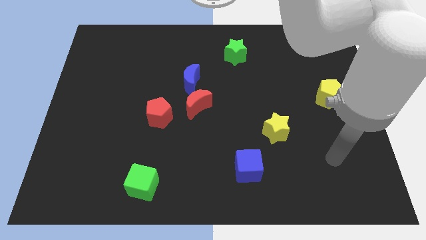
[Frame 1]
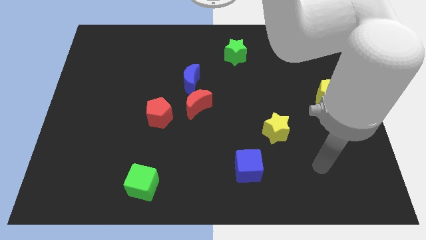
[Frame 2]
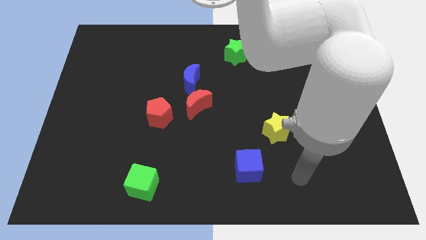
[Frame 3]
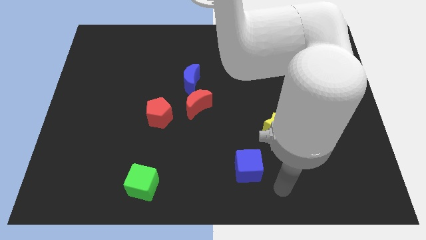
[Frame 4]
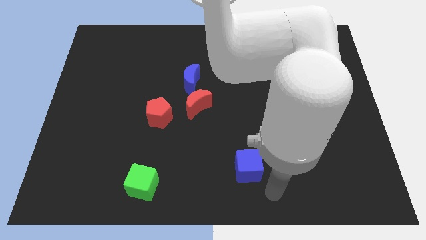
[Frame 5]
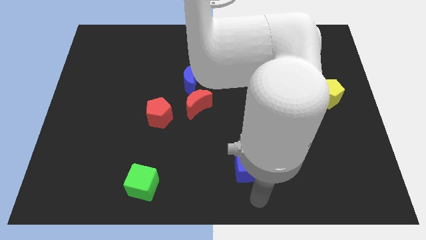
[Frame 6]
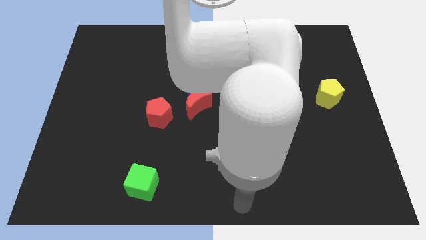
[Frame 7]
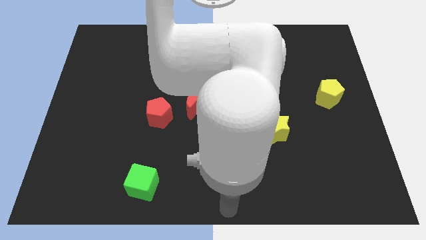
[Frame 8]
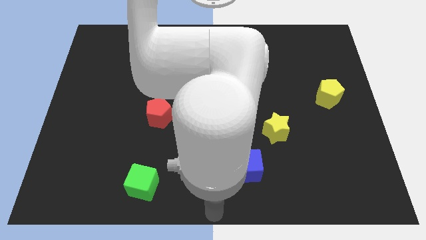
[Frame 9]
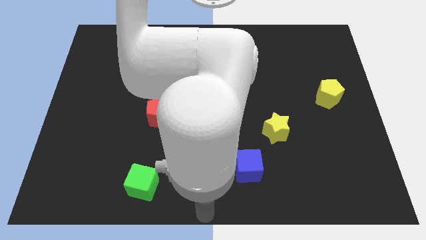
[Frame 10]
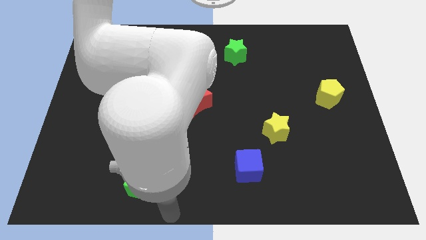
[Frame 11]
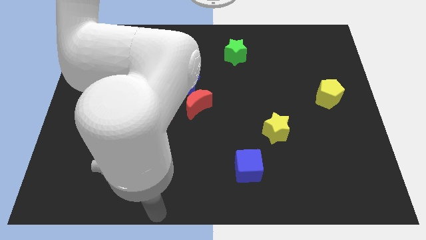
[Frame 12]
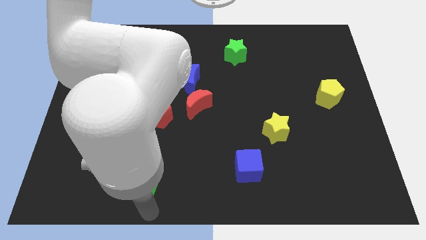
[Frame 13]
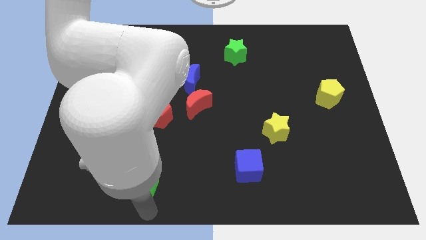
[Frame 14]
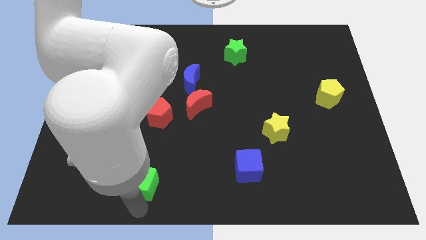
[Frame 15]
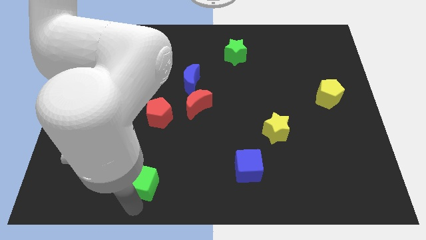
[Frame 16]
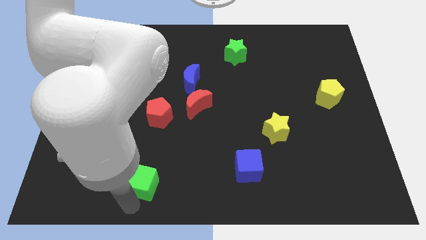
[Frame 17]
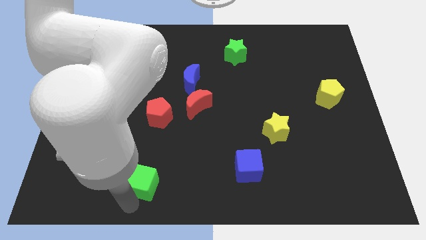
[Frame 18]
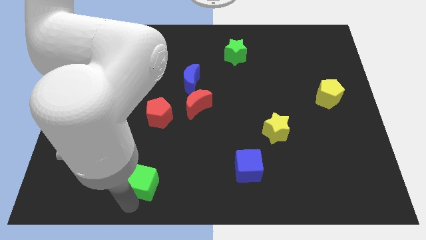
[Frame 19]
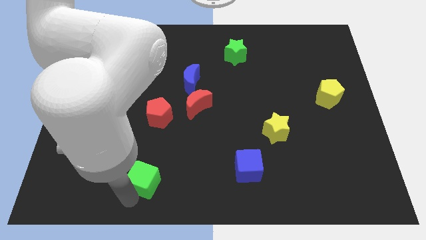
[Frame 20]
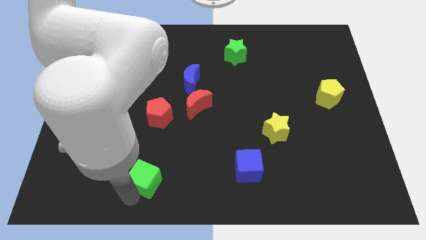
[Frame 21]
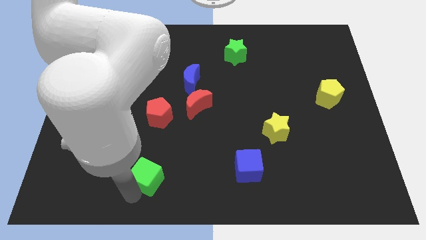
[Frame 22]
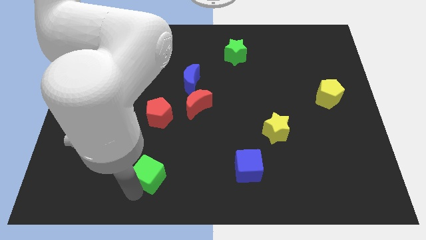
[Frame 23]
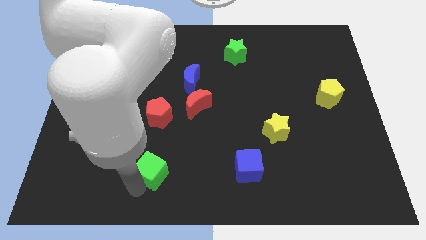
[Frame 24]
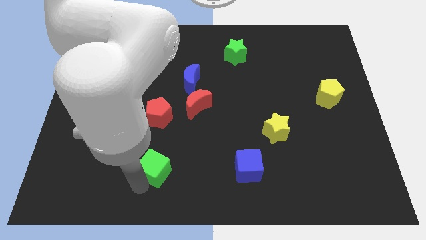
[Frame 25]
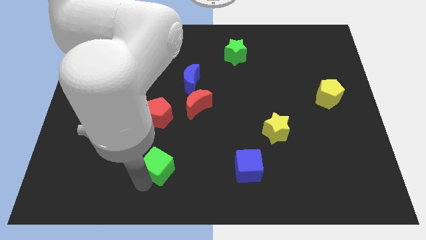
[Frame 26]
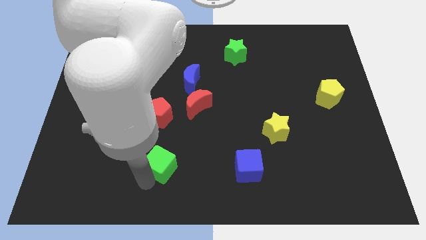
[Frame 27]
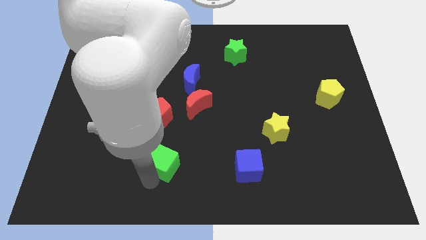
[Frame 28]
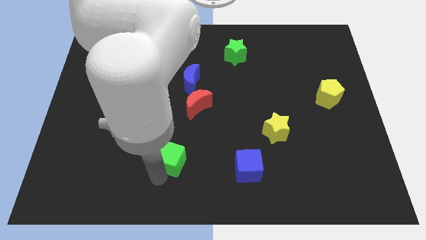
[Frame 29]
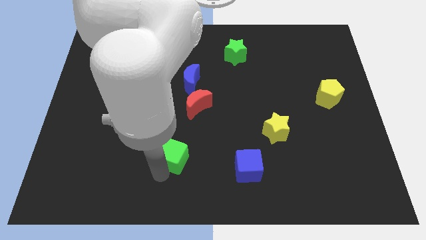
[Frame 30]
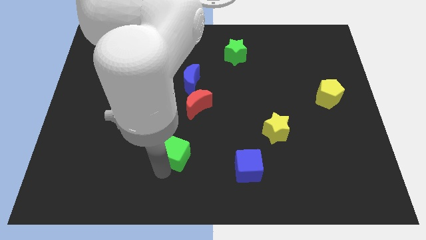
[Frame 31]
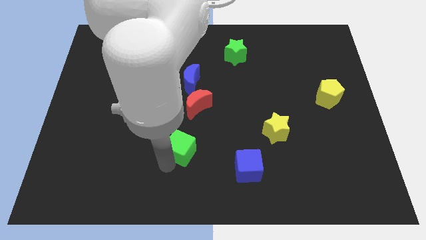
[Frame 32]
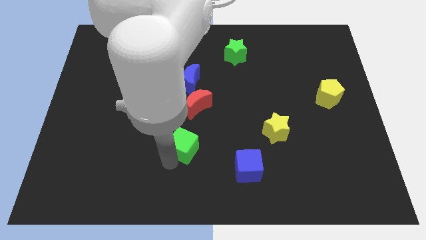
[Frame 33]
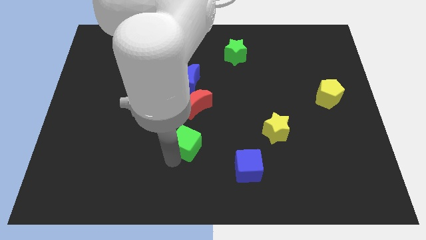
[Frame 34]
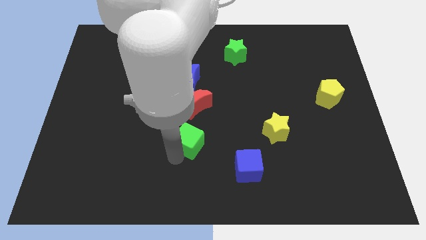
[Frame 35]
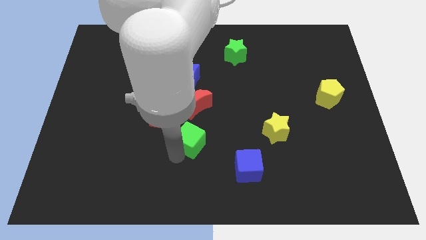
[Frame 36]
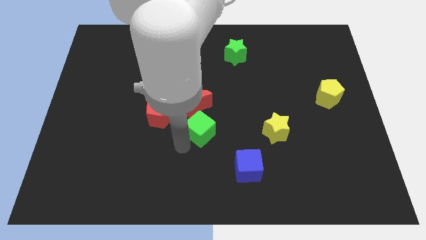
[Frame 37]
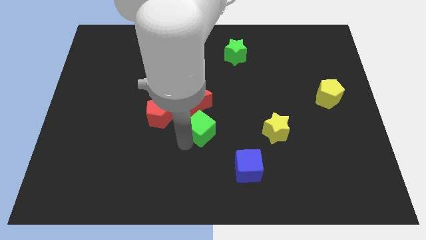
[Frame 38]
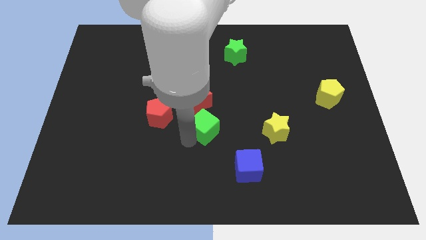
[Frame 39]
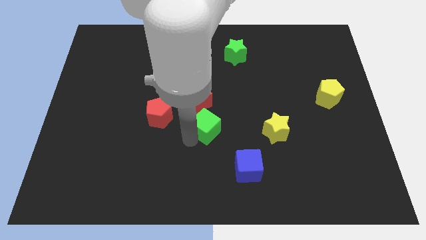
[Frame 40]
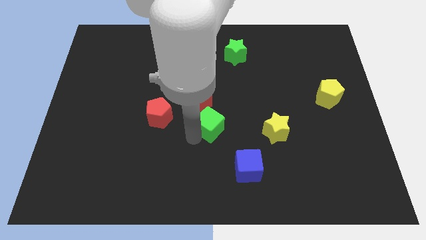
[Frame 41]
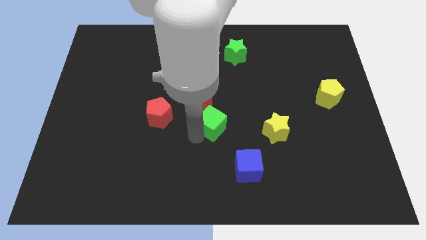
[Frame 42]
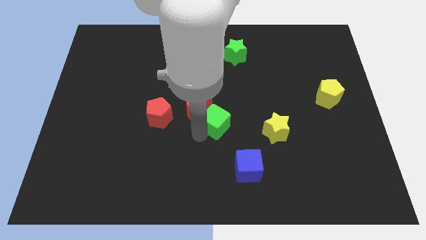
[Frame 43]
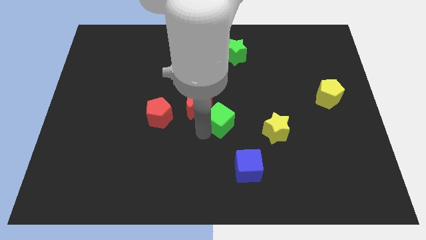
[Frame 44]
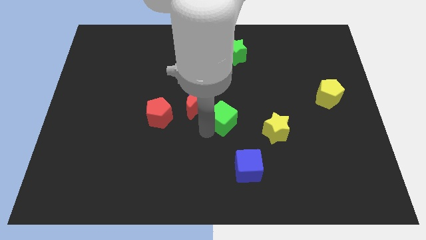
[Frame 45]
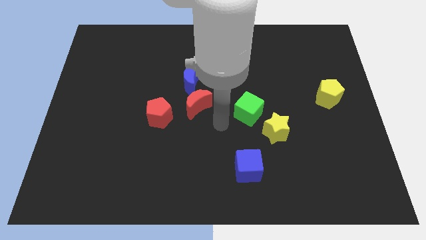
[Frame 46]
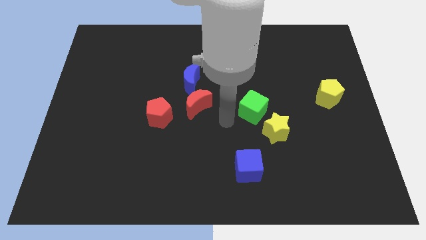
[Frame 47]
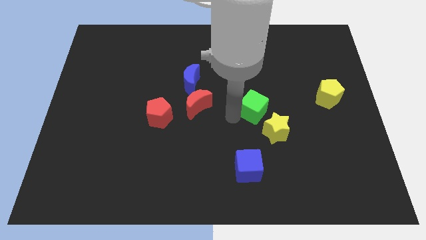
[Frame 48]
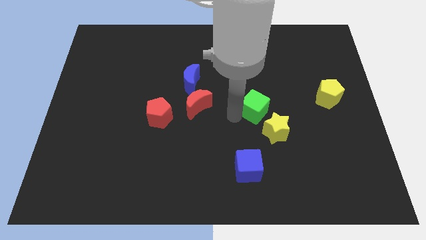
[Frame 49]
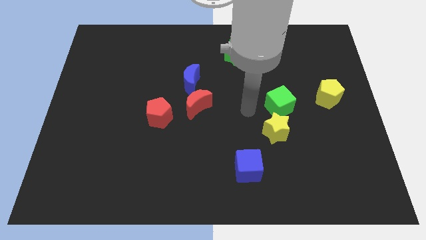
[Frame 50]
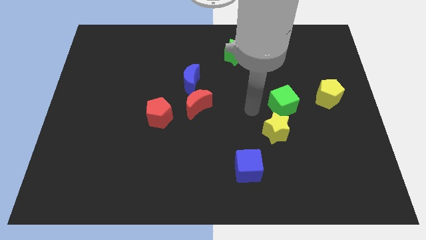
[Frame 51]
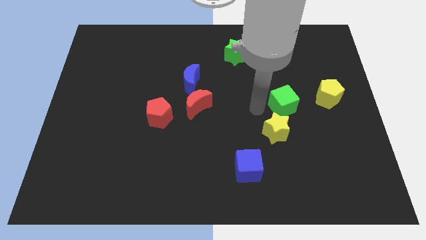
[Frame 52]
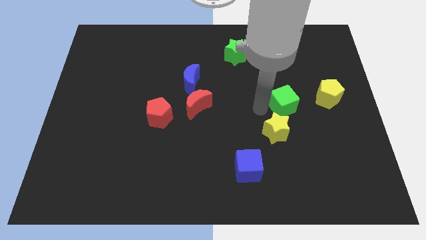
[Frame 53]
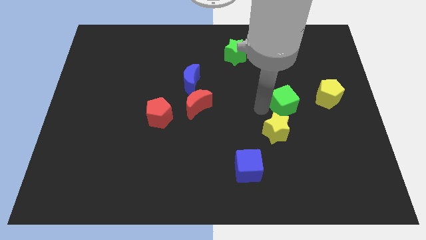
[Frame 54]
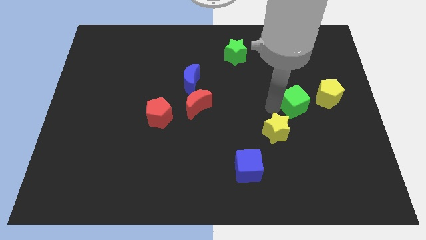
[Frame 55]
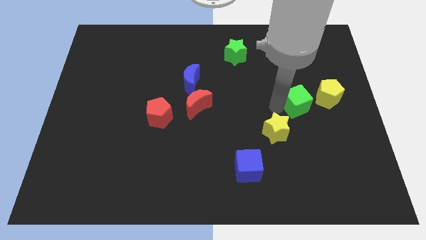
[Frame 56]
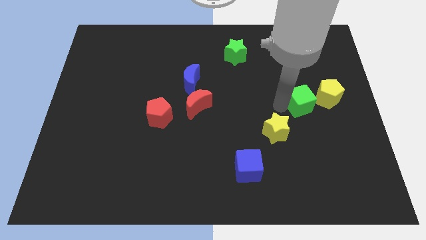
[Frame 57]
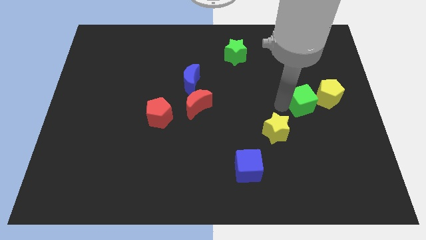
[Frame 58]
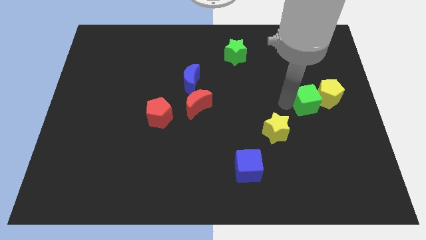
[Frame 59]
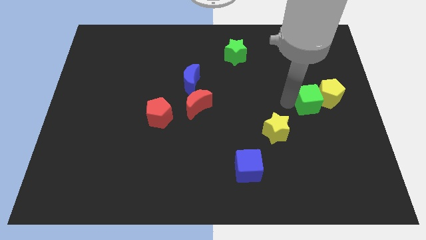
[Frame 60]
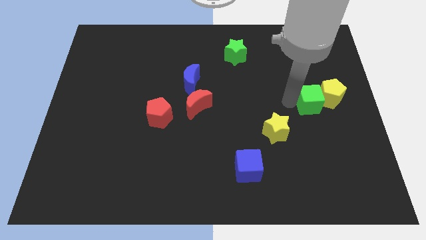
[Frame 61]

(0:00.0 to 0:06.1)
slide the green cube towards the yellow pentagon

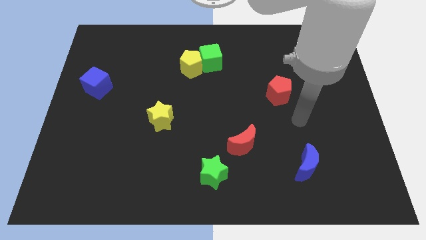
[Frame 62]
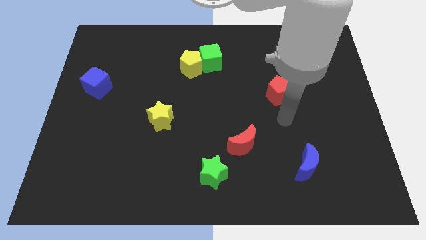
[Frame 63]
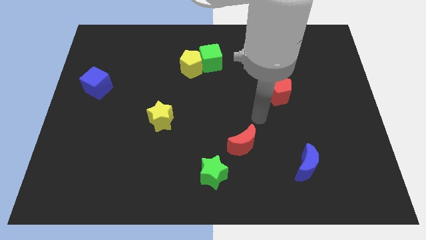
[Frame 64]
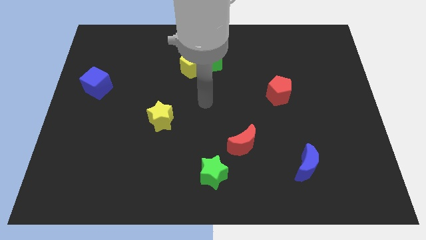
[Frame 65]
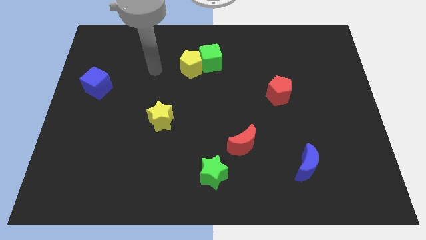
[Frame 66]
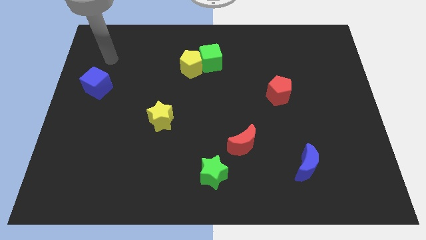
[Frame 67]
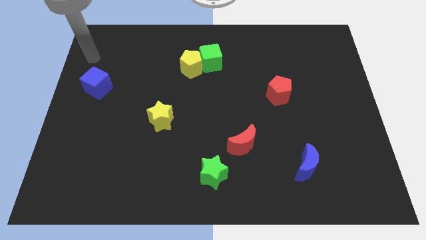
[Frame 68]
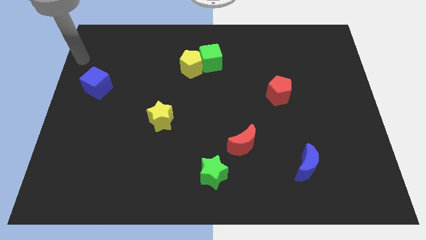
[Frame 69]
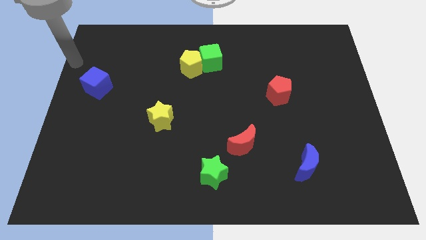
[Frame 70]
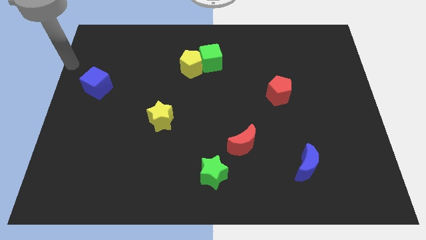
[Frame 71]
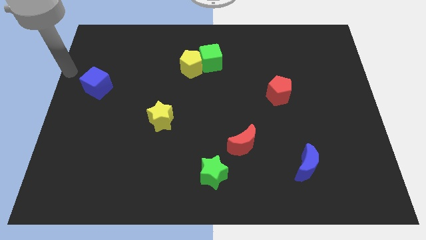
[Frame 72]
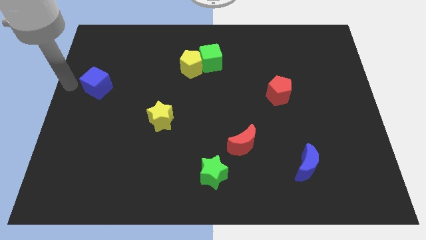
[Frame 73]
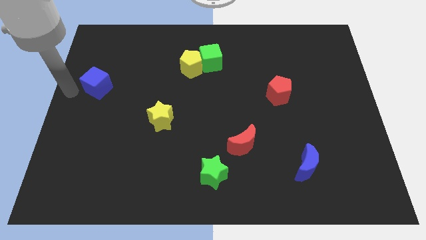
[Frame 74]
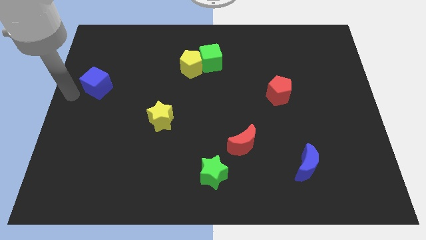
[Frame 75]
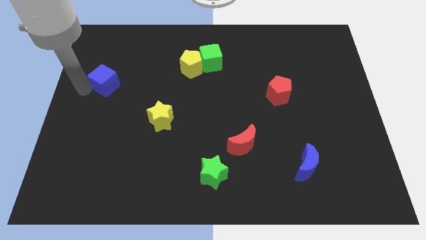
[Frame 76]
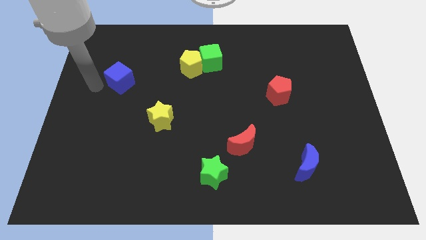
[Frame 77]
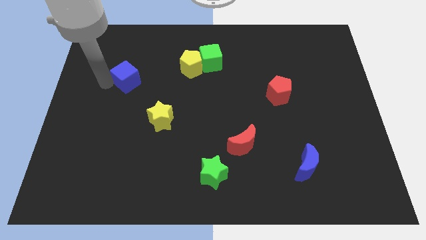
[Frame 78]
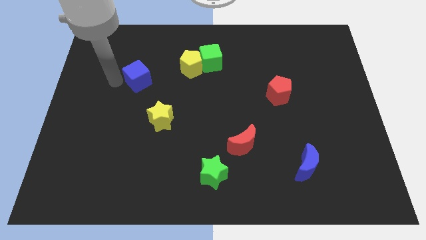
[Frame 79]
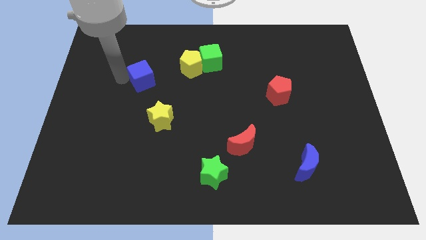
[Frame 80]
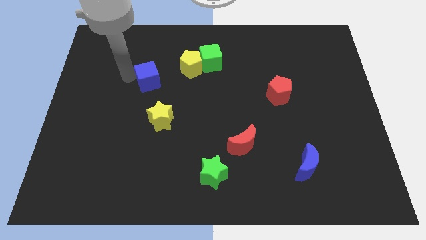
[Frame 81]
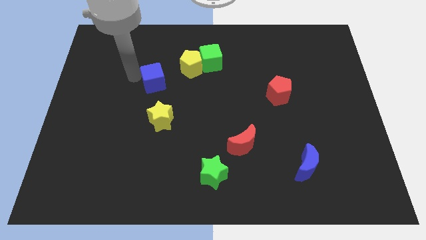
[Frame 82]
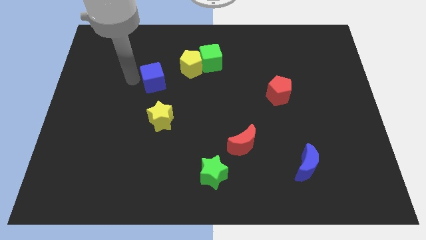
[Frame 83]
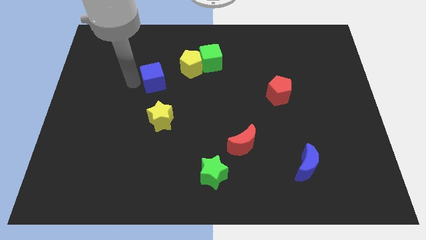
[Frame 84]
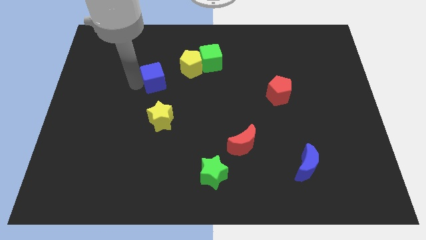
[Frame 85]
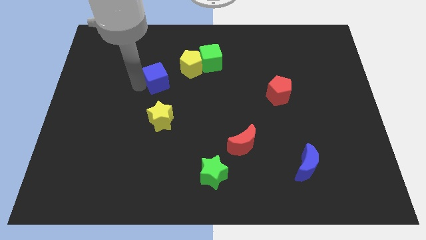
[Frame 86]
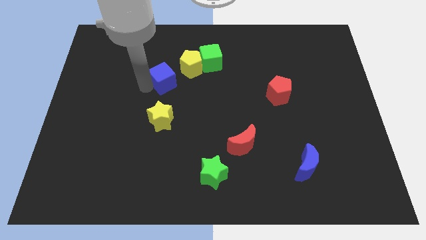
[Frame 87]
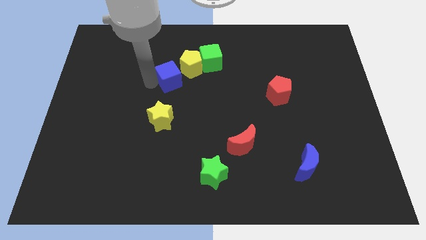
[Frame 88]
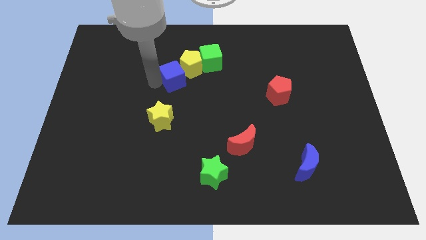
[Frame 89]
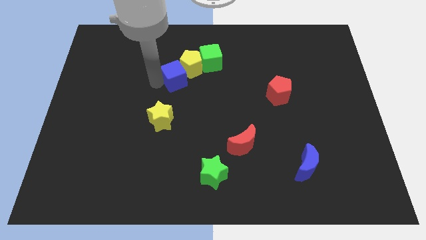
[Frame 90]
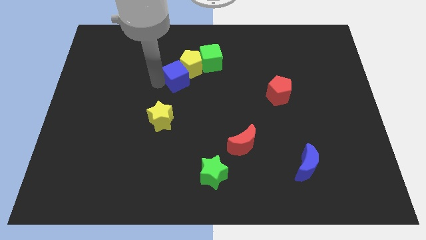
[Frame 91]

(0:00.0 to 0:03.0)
move the blue cube to the yellow pentagon
